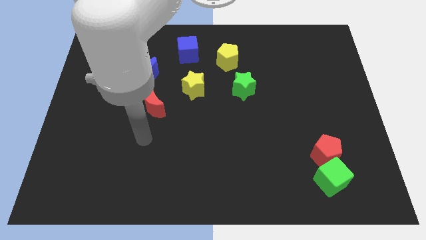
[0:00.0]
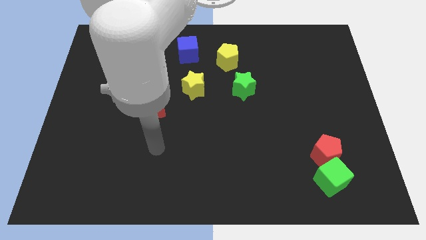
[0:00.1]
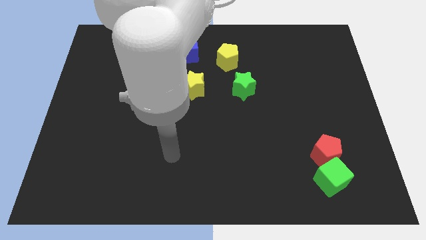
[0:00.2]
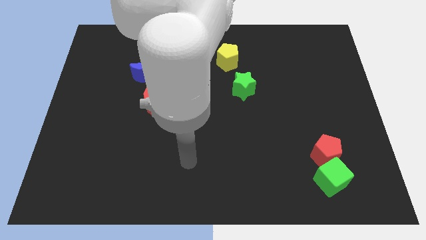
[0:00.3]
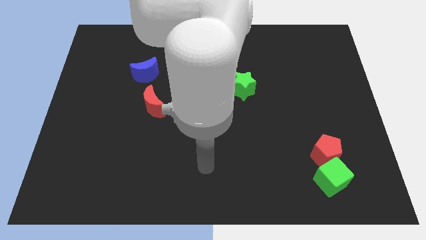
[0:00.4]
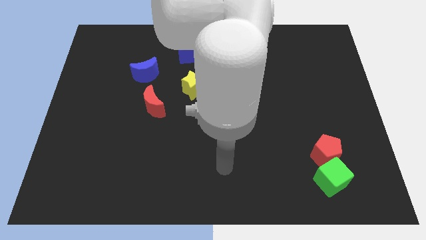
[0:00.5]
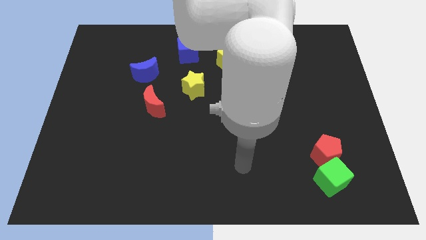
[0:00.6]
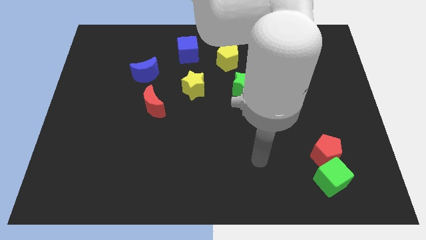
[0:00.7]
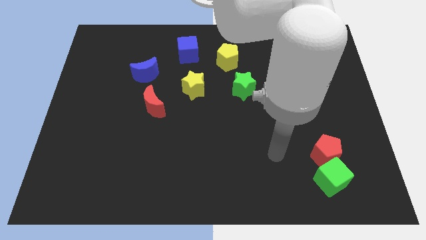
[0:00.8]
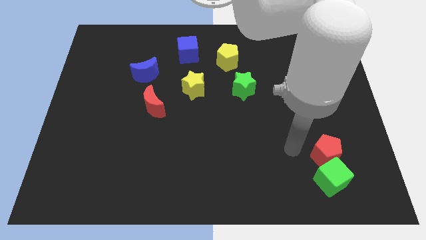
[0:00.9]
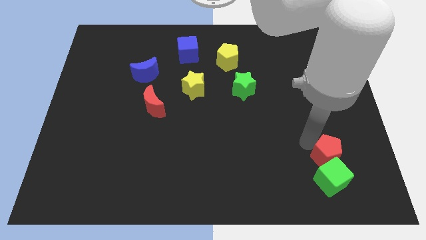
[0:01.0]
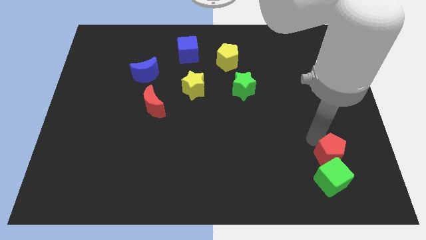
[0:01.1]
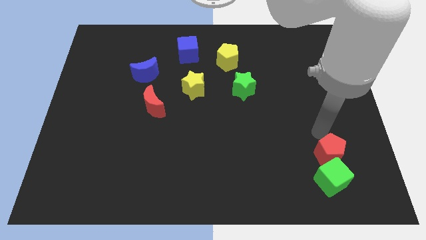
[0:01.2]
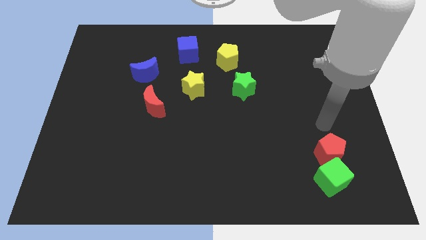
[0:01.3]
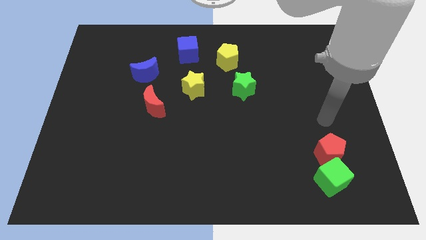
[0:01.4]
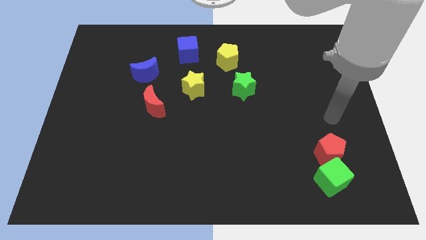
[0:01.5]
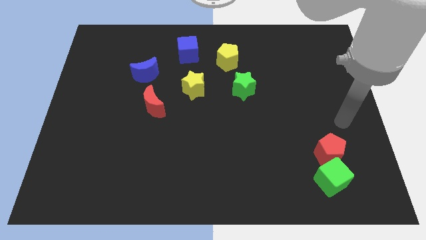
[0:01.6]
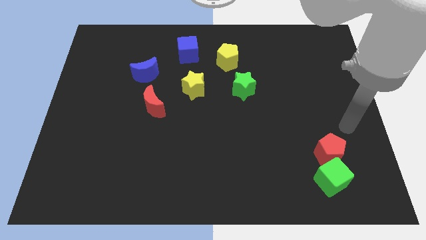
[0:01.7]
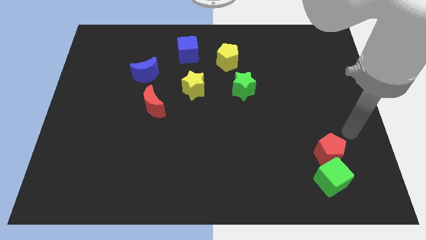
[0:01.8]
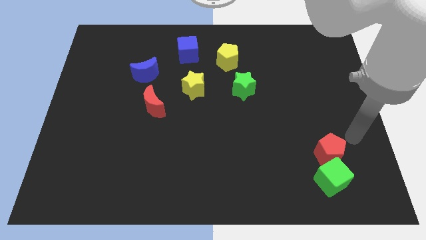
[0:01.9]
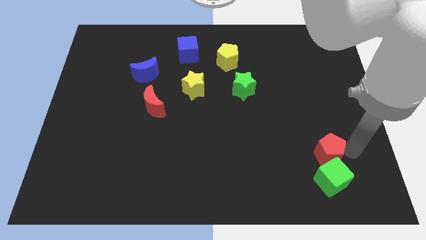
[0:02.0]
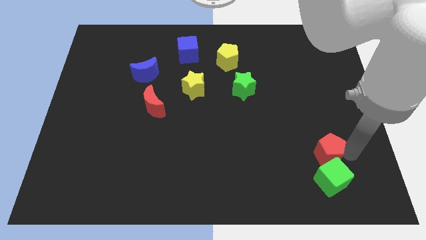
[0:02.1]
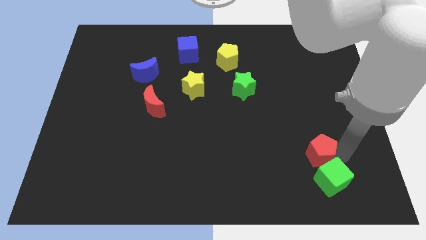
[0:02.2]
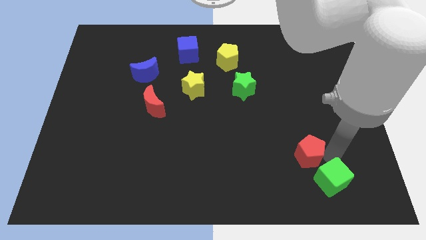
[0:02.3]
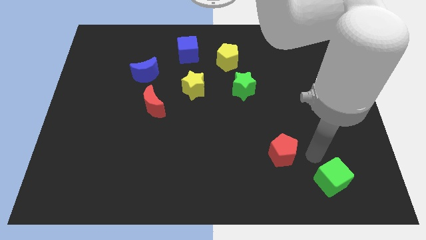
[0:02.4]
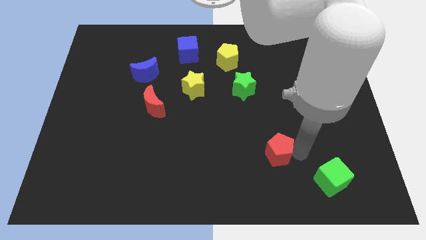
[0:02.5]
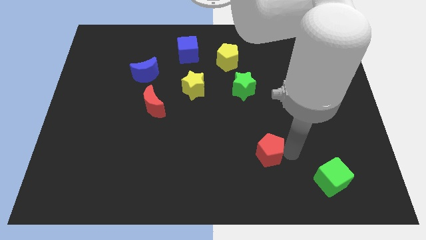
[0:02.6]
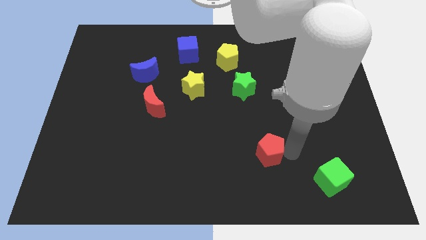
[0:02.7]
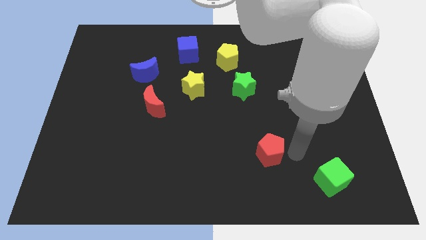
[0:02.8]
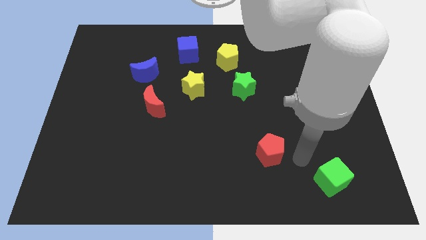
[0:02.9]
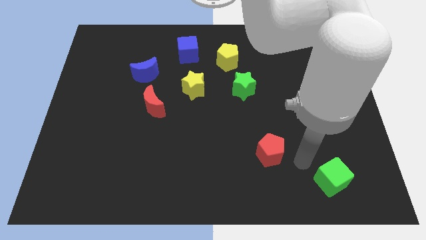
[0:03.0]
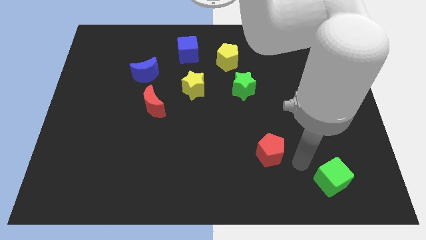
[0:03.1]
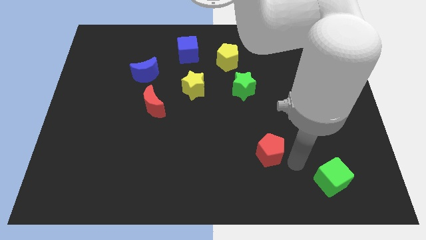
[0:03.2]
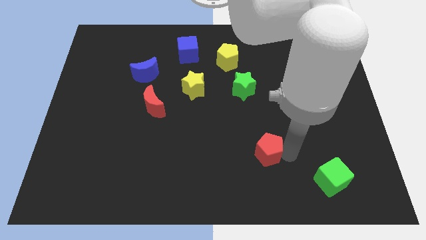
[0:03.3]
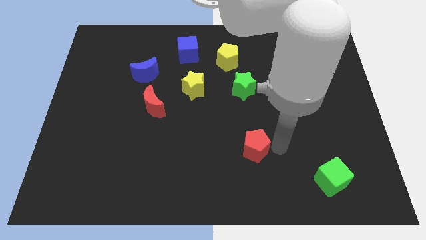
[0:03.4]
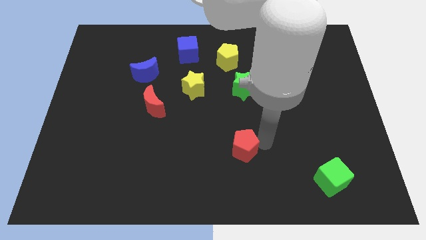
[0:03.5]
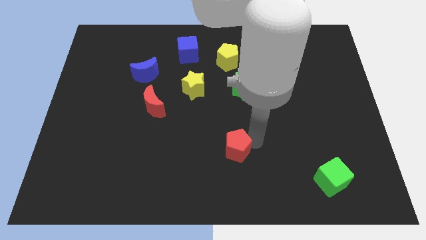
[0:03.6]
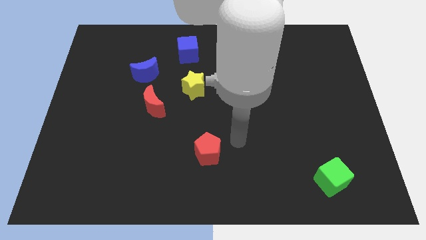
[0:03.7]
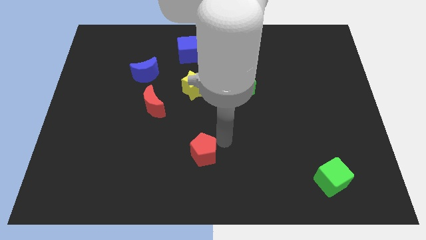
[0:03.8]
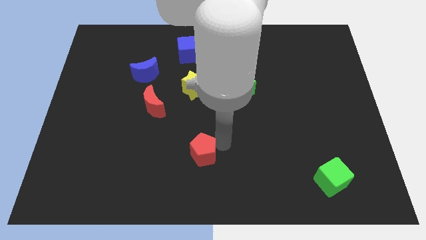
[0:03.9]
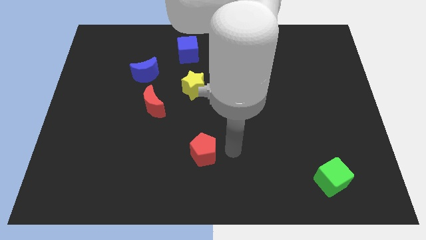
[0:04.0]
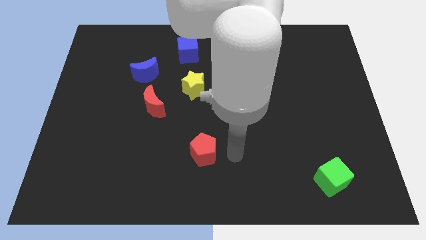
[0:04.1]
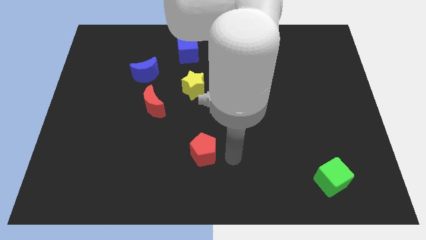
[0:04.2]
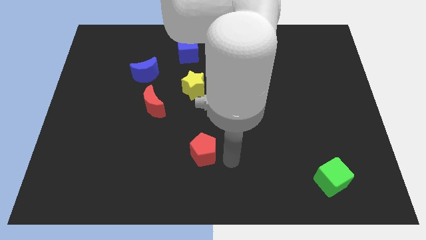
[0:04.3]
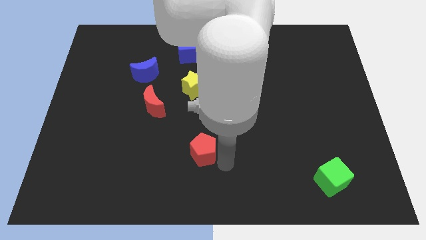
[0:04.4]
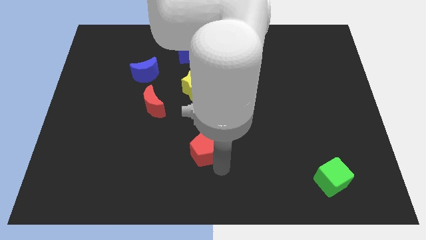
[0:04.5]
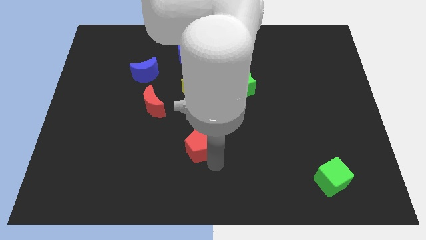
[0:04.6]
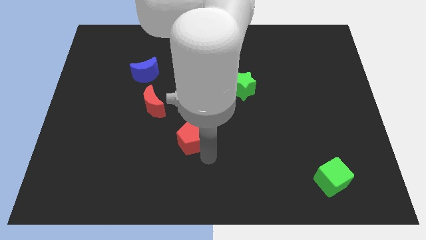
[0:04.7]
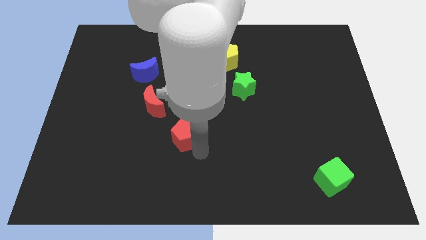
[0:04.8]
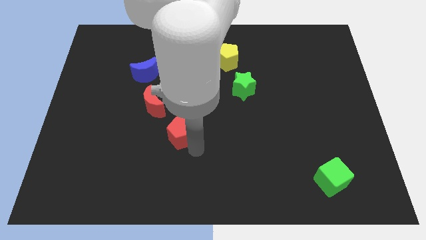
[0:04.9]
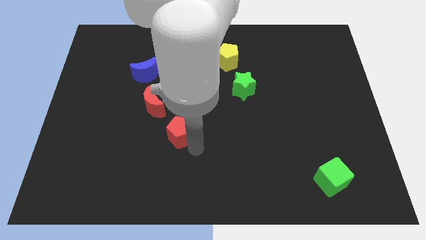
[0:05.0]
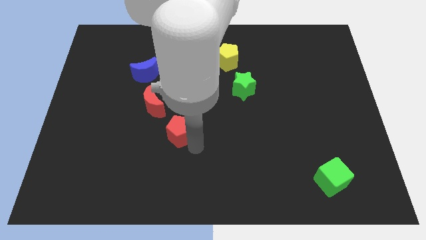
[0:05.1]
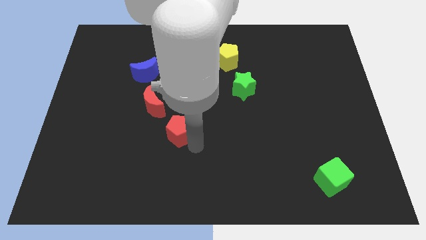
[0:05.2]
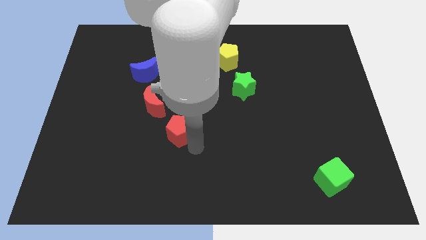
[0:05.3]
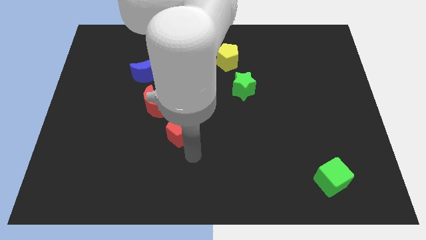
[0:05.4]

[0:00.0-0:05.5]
push the red pentagon into the group of blocks

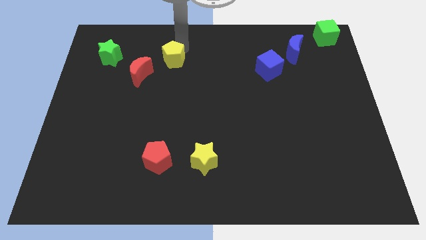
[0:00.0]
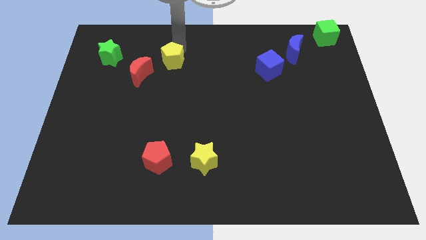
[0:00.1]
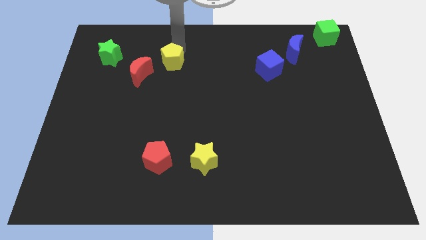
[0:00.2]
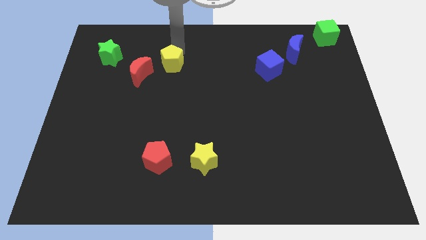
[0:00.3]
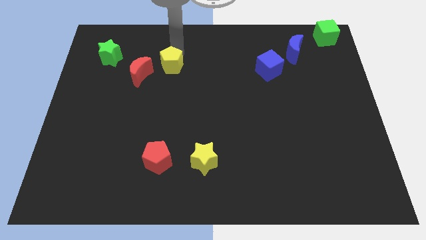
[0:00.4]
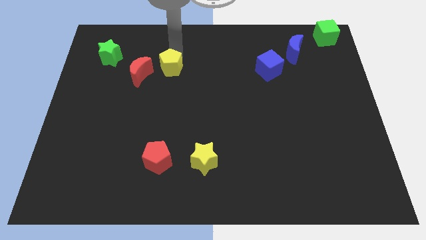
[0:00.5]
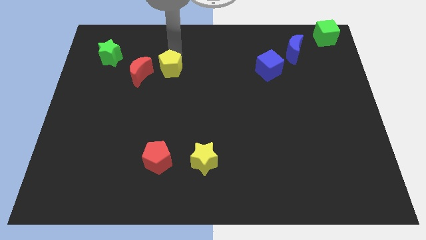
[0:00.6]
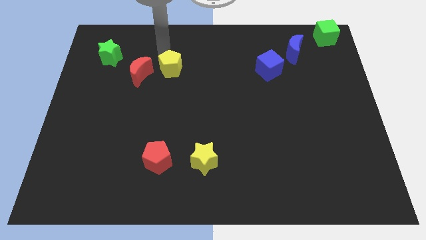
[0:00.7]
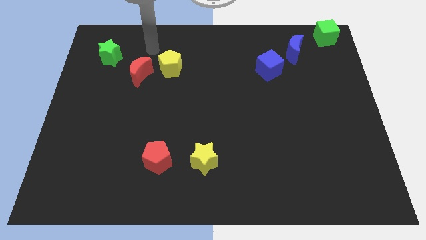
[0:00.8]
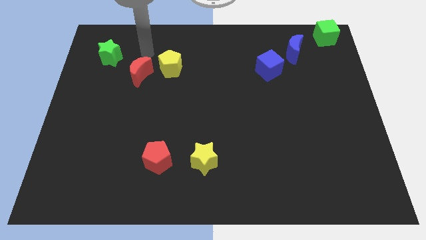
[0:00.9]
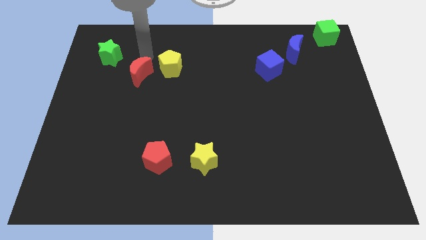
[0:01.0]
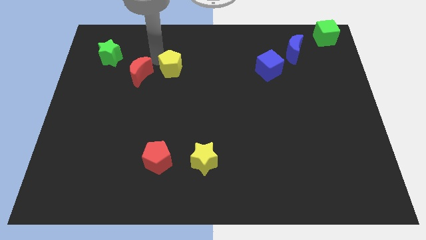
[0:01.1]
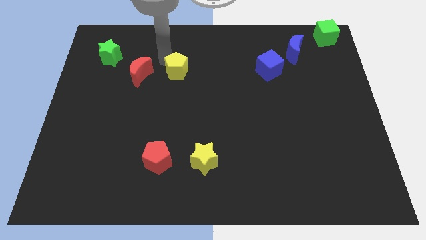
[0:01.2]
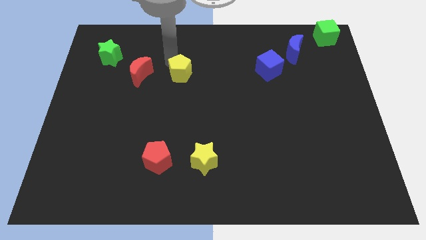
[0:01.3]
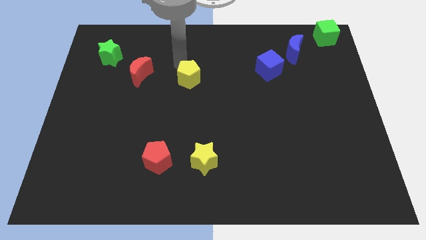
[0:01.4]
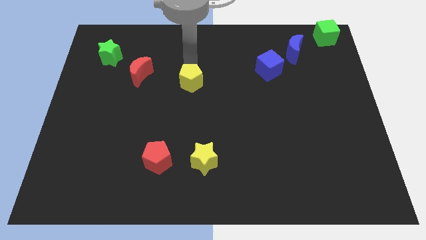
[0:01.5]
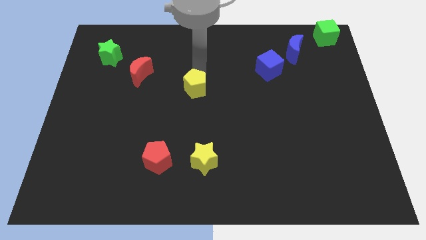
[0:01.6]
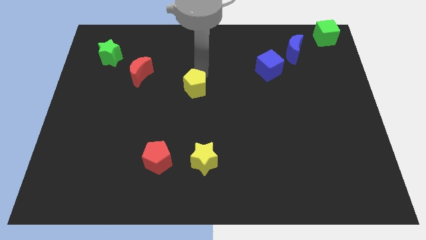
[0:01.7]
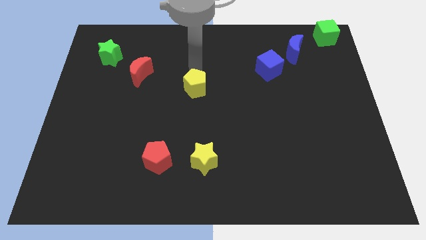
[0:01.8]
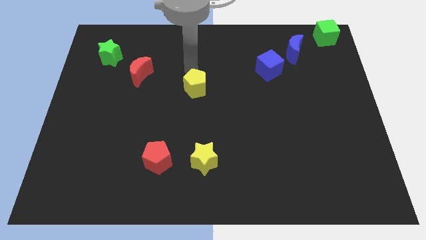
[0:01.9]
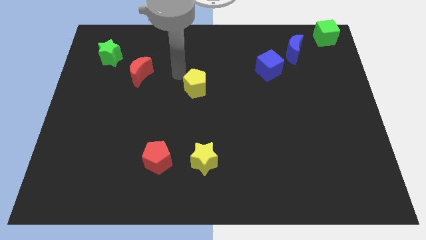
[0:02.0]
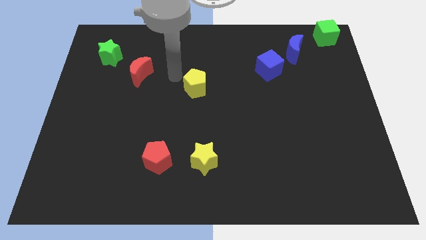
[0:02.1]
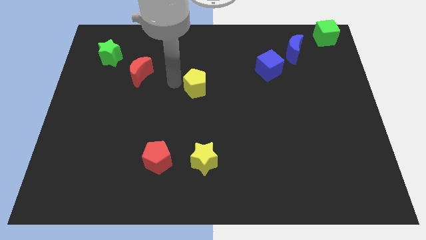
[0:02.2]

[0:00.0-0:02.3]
place the yellow pentagon vertically above the yellow star

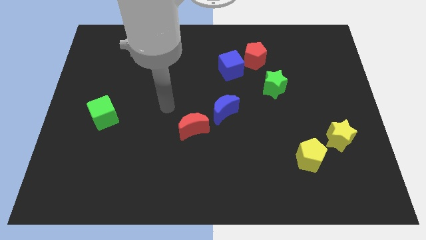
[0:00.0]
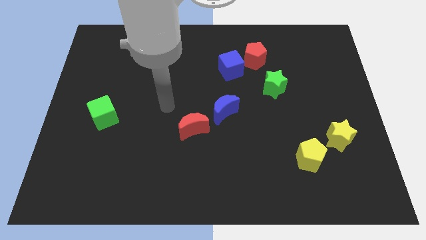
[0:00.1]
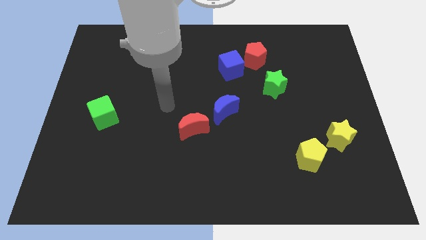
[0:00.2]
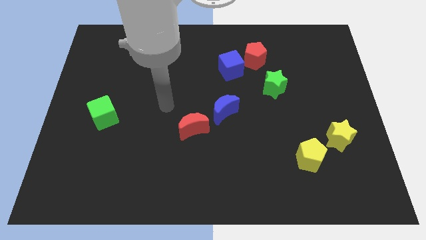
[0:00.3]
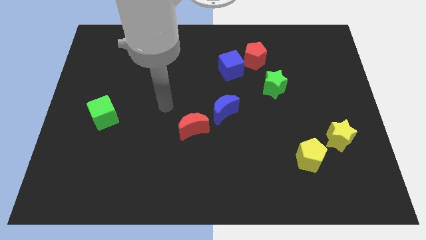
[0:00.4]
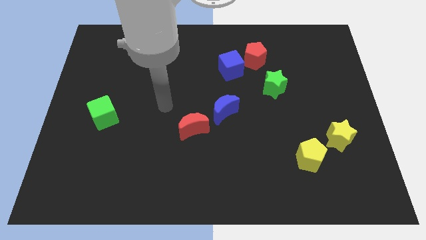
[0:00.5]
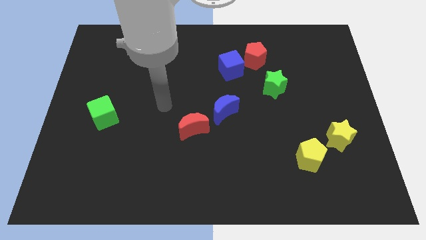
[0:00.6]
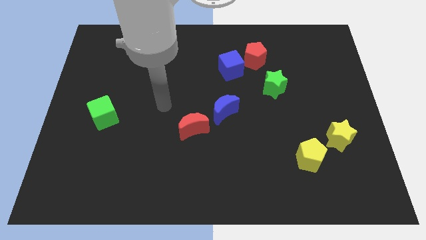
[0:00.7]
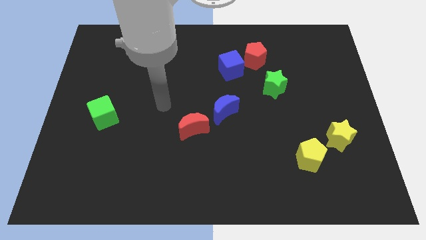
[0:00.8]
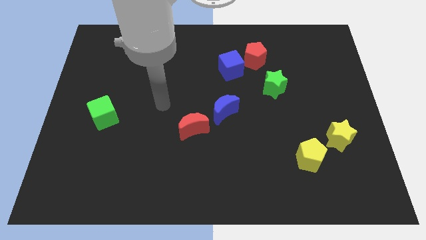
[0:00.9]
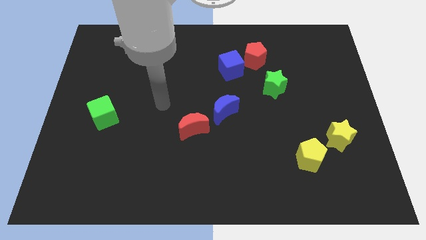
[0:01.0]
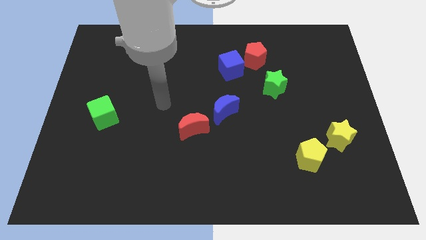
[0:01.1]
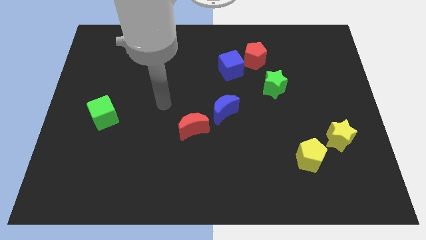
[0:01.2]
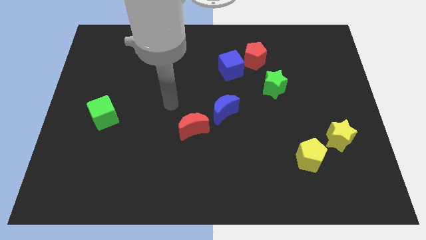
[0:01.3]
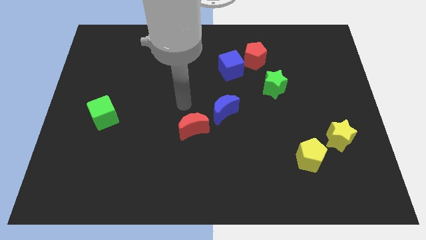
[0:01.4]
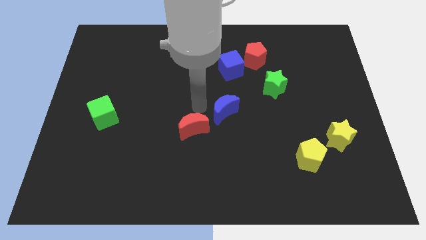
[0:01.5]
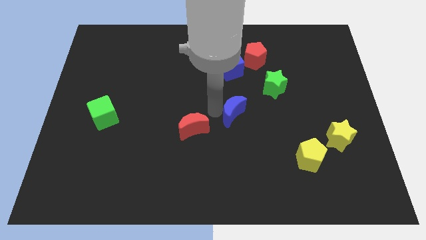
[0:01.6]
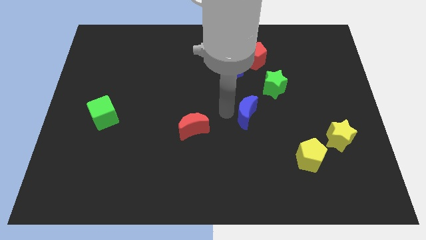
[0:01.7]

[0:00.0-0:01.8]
touch the bottom left of blue crescent
